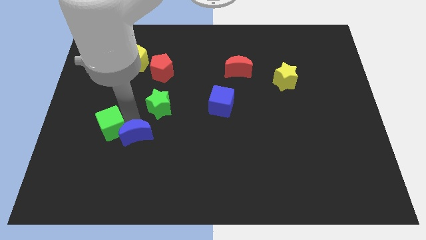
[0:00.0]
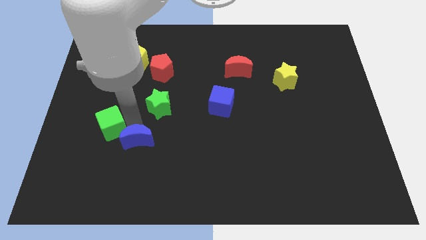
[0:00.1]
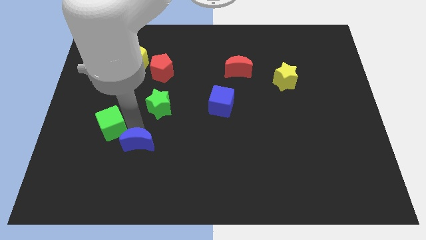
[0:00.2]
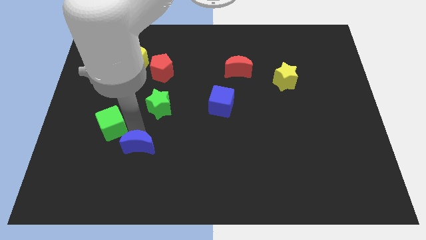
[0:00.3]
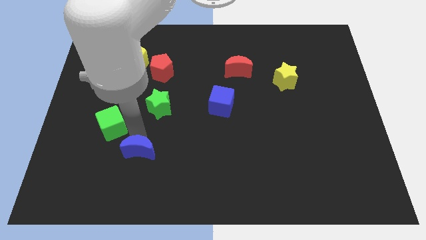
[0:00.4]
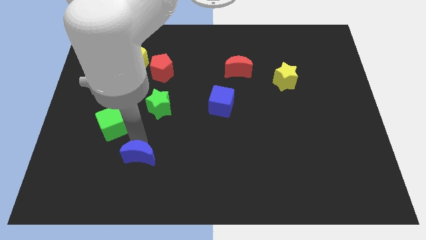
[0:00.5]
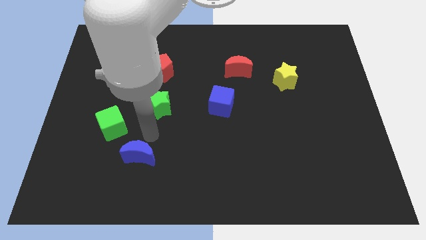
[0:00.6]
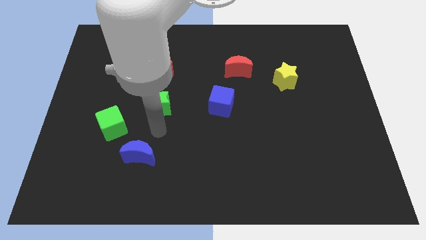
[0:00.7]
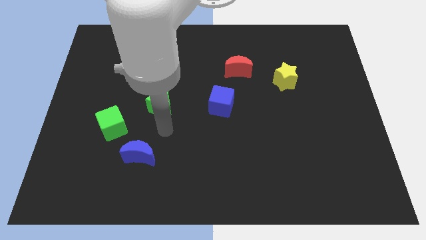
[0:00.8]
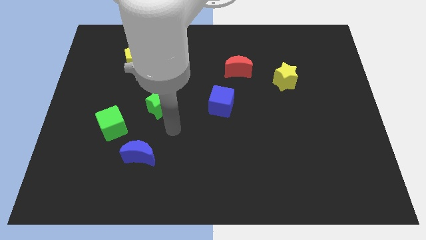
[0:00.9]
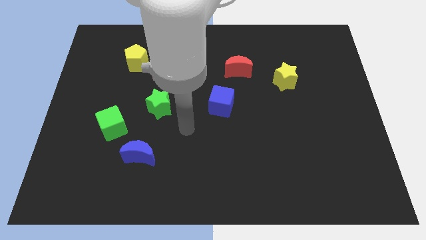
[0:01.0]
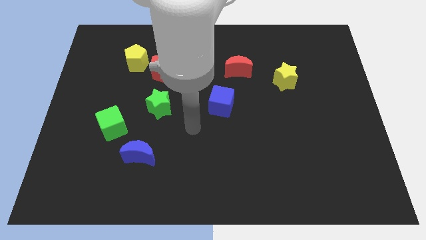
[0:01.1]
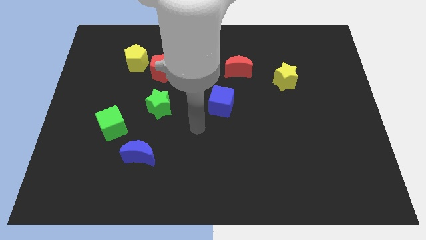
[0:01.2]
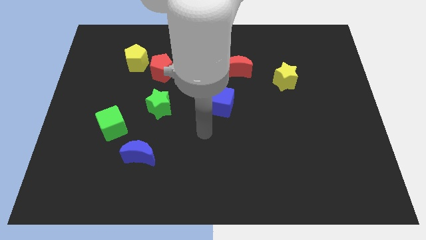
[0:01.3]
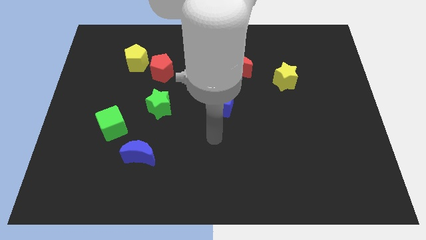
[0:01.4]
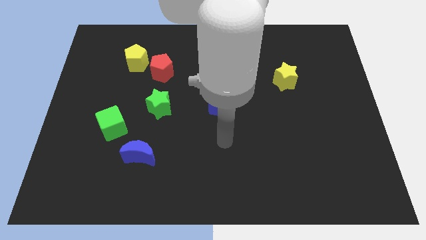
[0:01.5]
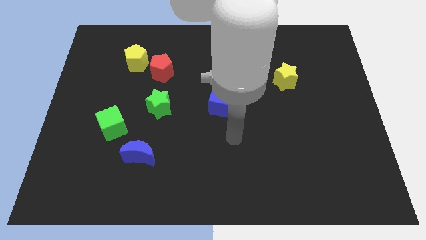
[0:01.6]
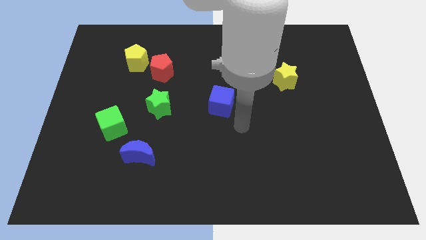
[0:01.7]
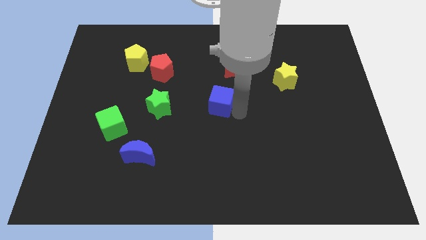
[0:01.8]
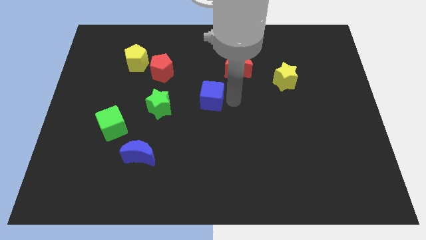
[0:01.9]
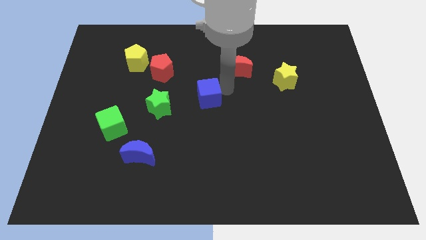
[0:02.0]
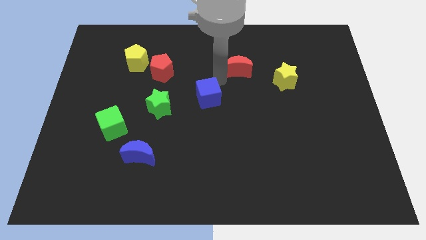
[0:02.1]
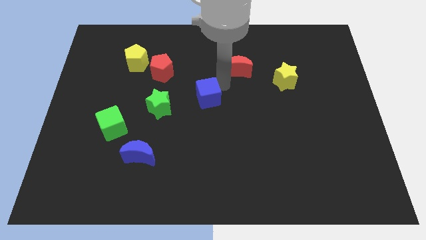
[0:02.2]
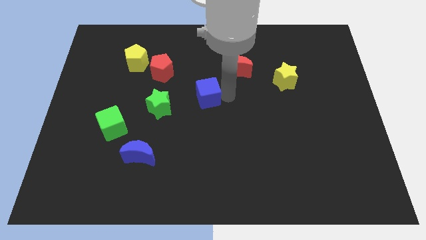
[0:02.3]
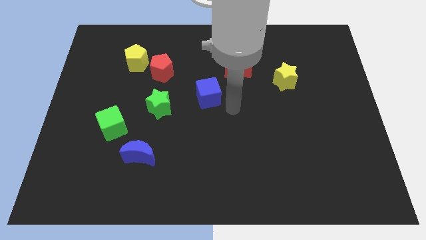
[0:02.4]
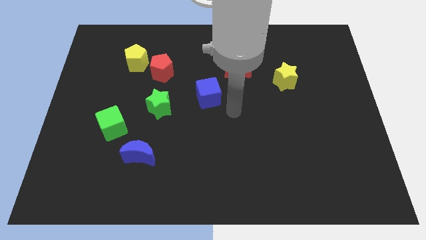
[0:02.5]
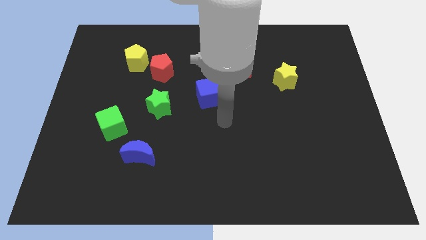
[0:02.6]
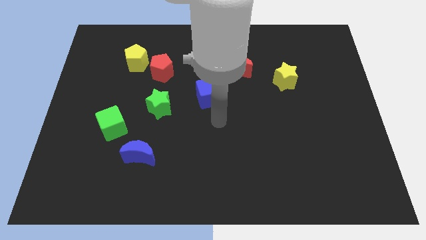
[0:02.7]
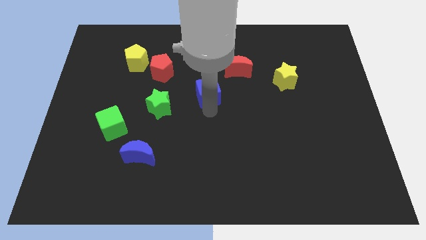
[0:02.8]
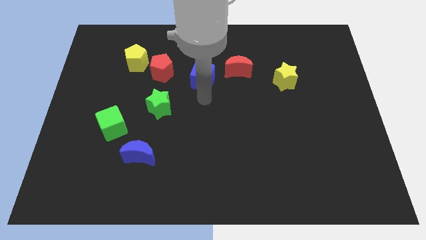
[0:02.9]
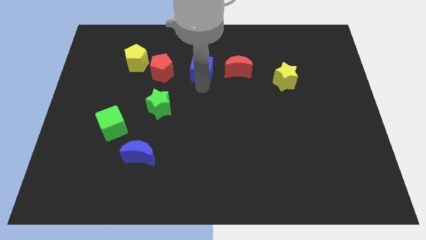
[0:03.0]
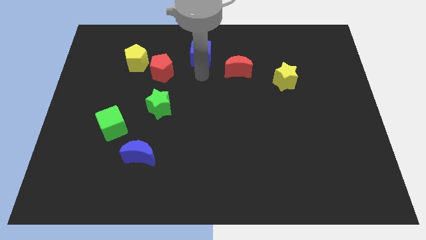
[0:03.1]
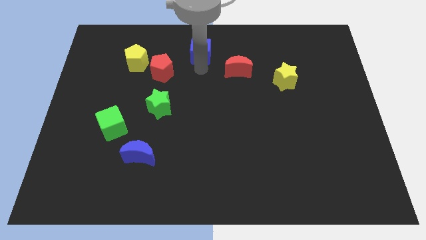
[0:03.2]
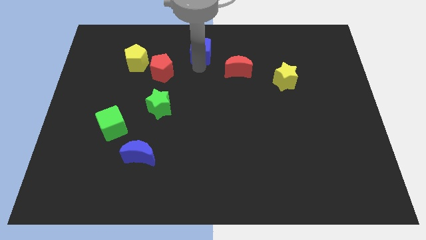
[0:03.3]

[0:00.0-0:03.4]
place the blue cube diagonally in between the red pentagon and red moon

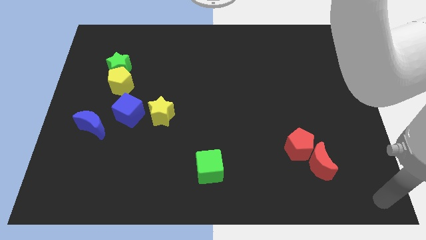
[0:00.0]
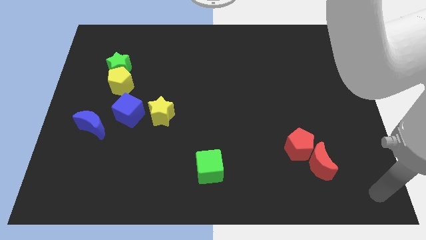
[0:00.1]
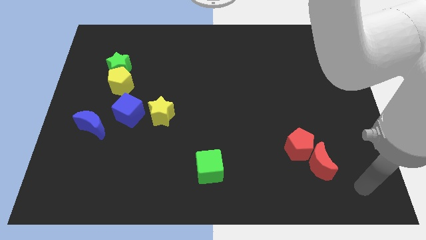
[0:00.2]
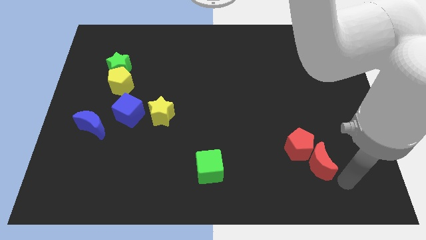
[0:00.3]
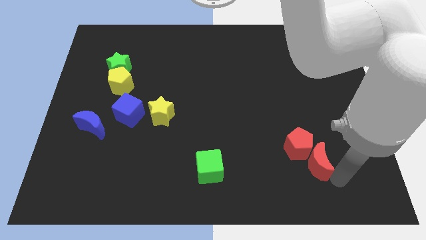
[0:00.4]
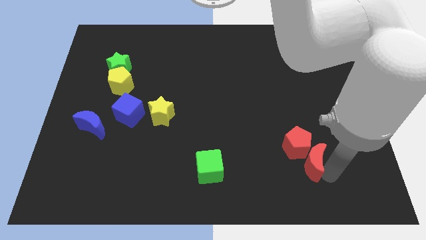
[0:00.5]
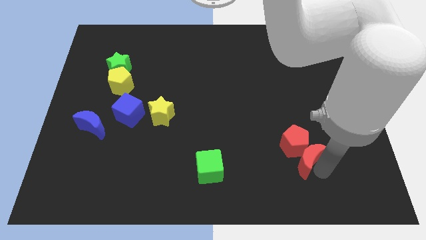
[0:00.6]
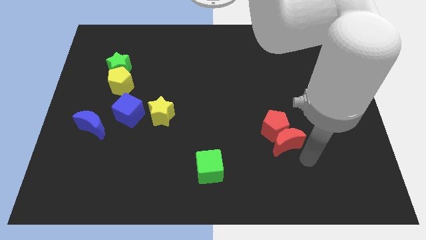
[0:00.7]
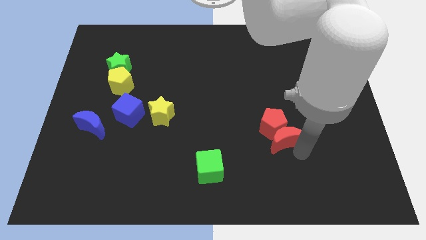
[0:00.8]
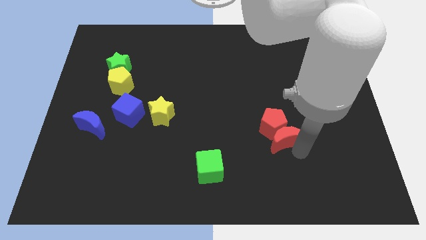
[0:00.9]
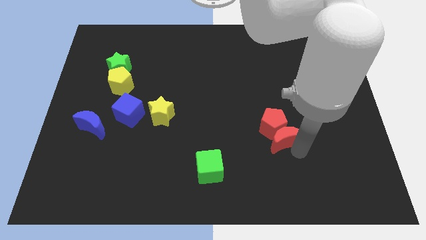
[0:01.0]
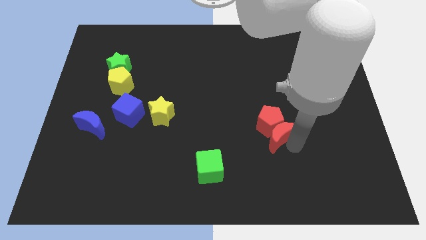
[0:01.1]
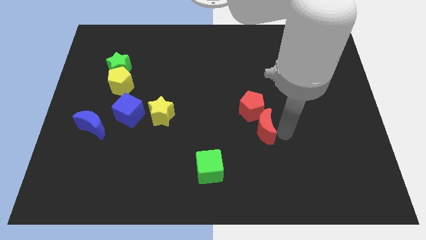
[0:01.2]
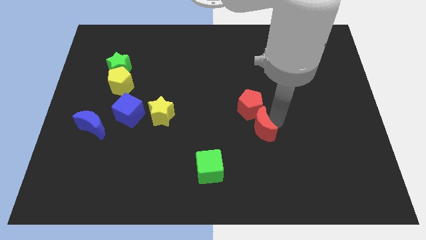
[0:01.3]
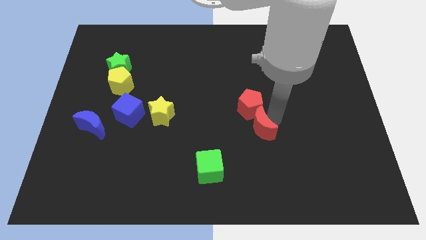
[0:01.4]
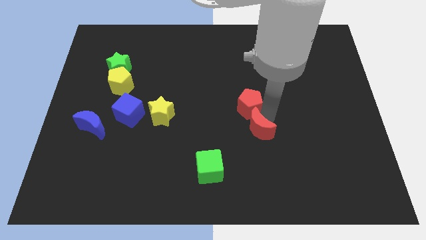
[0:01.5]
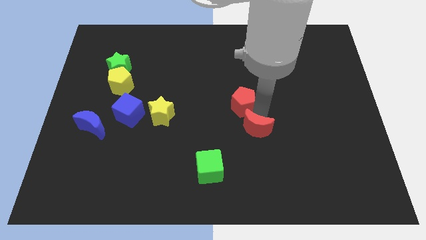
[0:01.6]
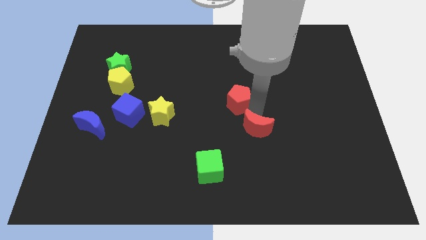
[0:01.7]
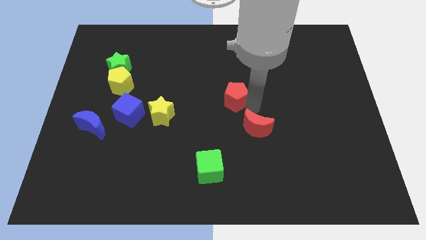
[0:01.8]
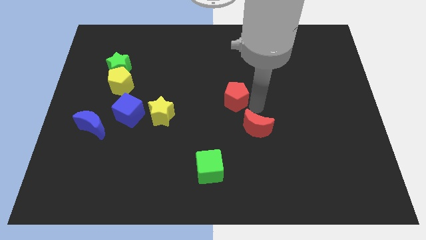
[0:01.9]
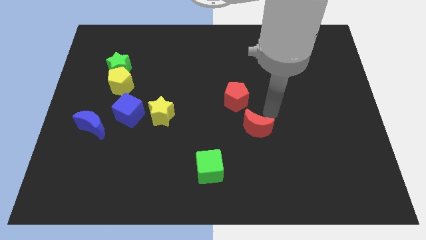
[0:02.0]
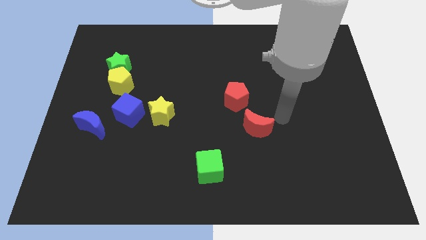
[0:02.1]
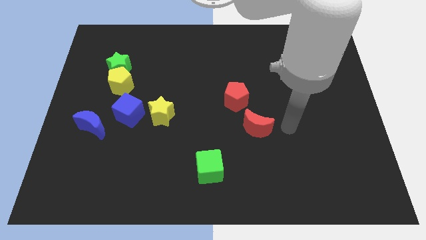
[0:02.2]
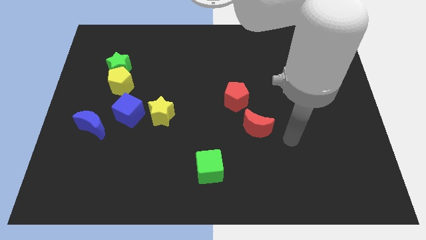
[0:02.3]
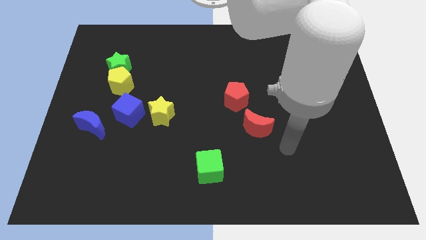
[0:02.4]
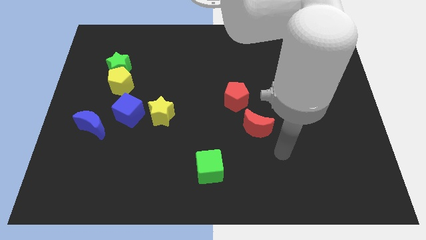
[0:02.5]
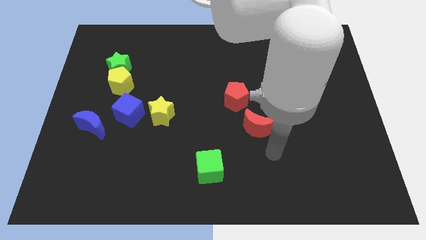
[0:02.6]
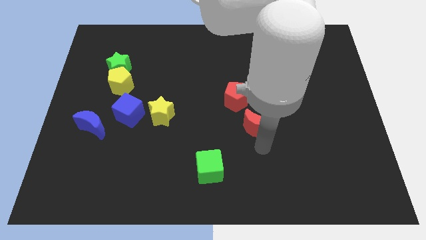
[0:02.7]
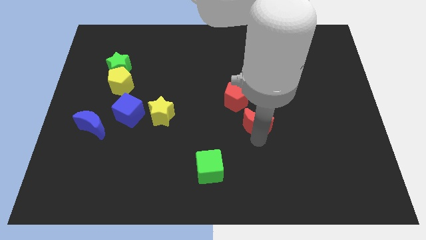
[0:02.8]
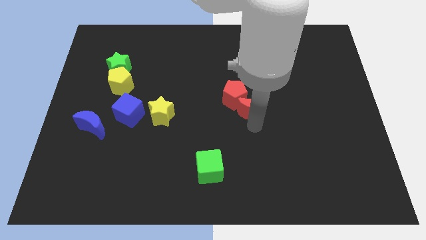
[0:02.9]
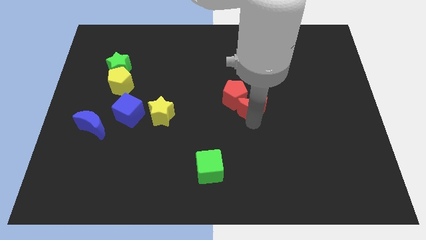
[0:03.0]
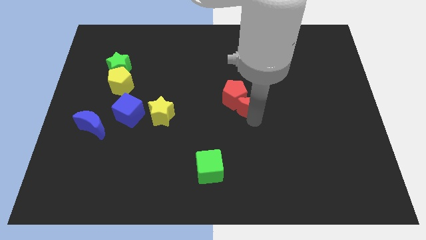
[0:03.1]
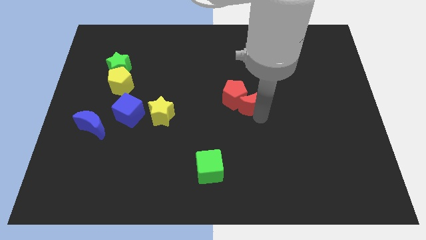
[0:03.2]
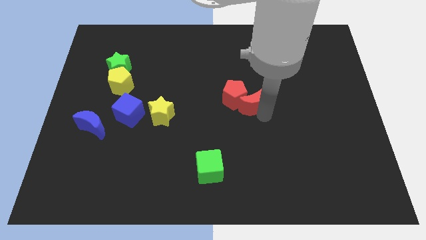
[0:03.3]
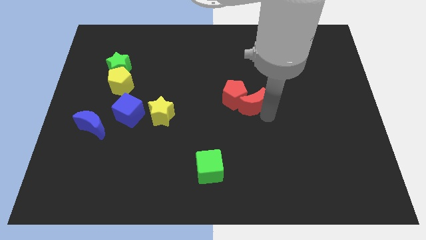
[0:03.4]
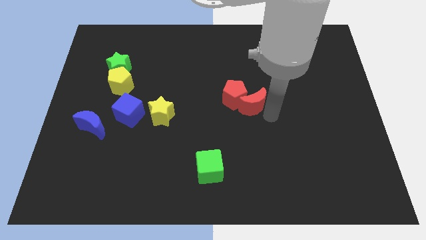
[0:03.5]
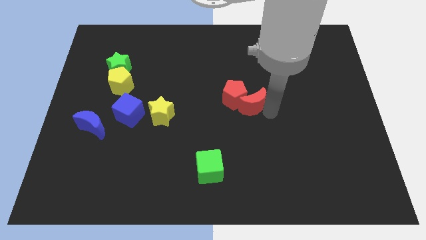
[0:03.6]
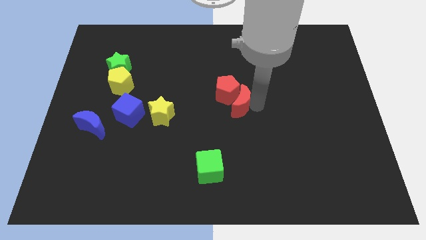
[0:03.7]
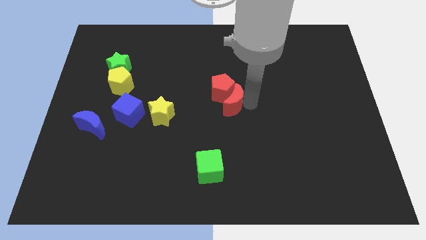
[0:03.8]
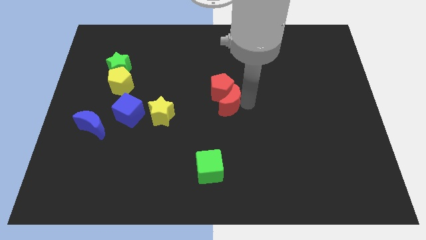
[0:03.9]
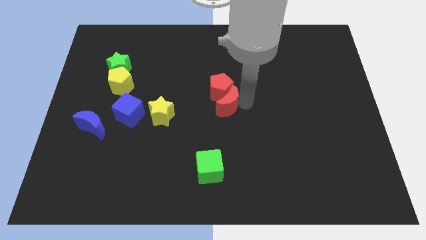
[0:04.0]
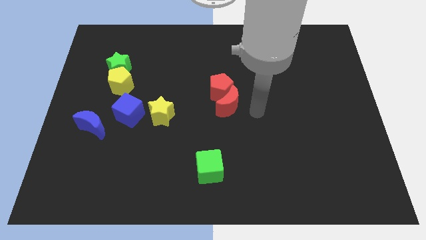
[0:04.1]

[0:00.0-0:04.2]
push the red pentagon with the red crescent towards the center of the board

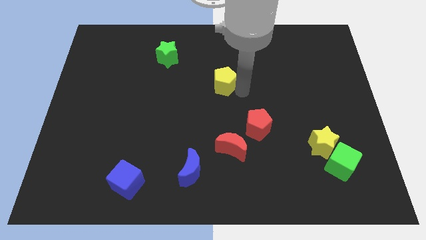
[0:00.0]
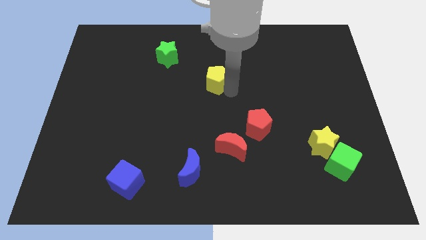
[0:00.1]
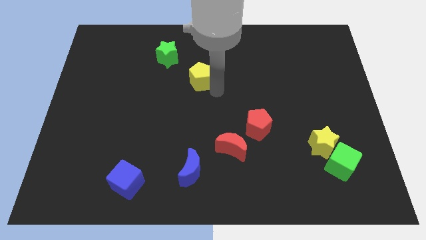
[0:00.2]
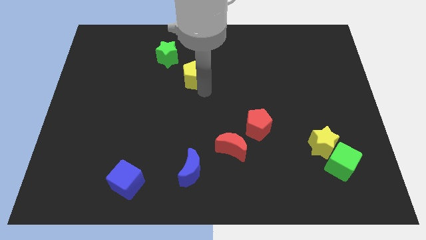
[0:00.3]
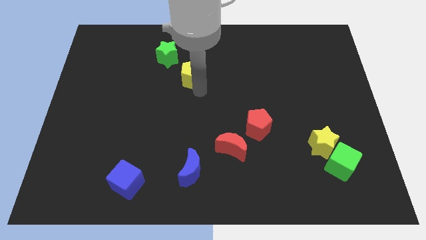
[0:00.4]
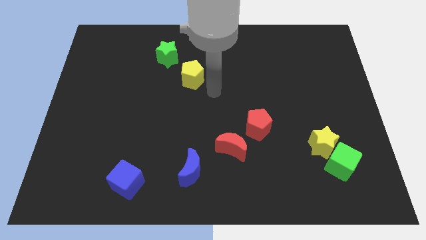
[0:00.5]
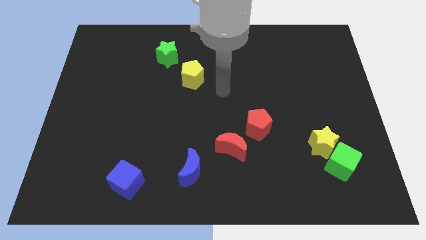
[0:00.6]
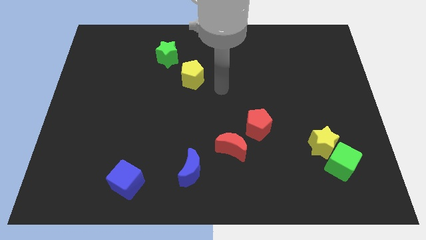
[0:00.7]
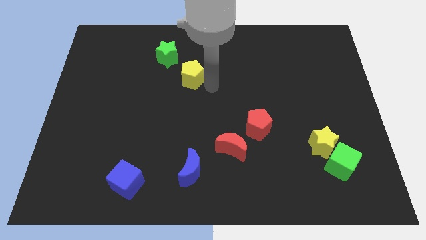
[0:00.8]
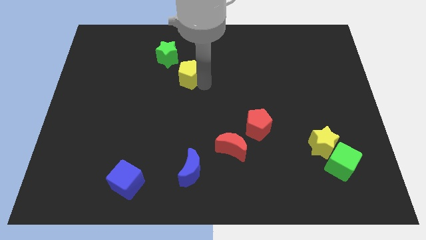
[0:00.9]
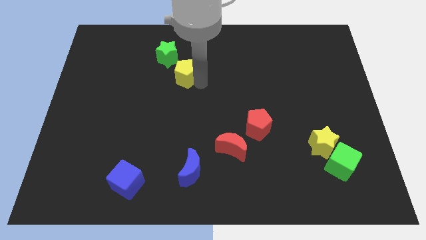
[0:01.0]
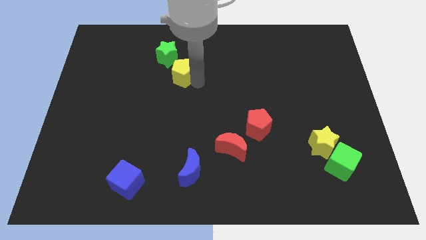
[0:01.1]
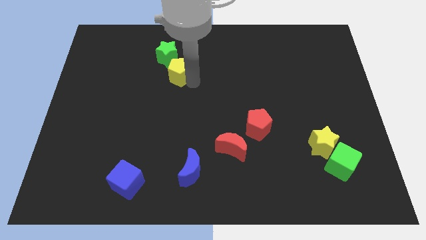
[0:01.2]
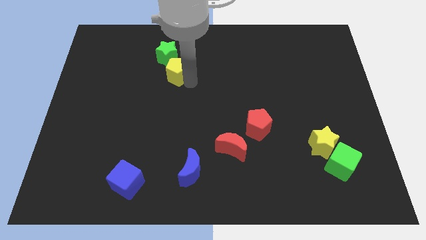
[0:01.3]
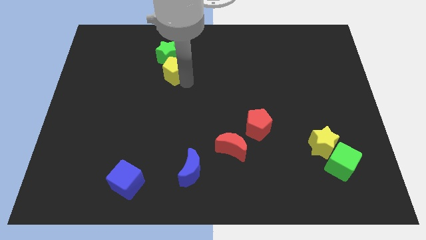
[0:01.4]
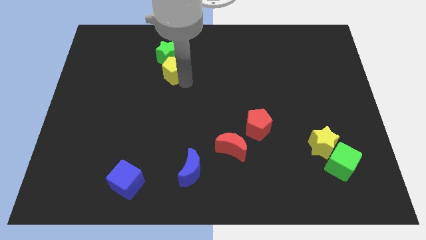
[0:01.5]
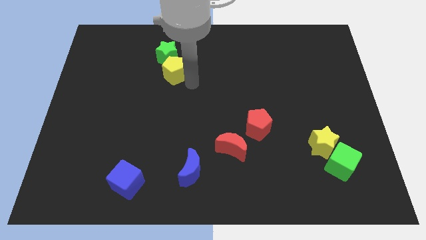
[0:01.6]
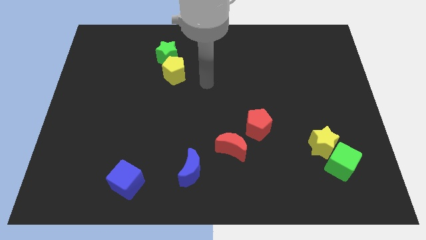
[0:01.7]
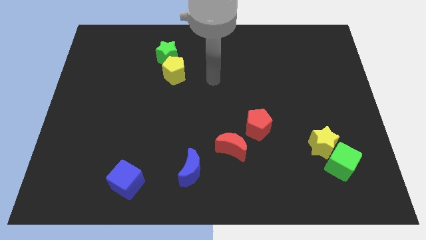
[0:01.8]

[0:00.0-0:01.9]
push the yellow pentagon into the green star
